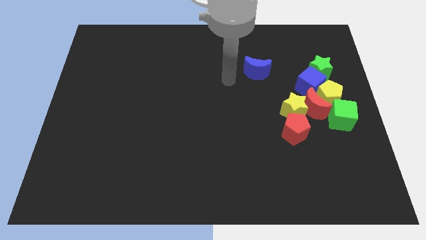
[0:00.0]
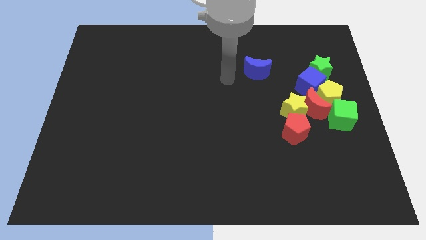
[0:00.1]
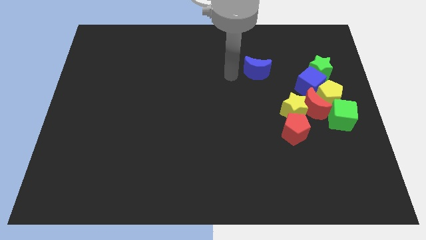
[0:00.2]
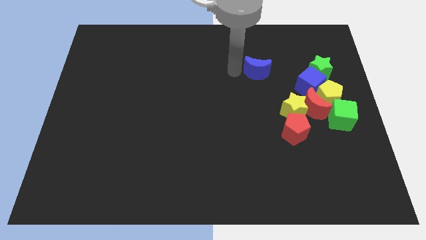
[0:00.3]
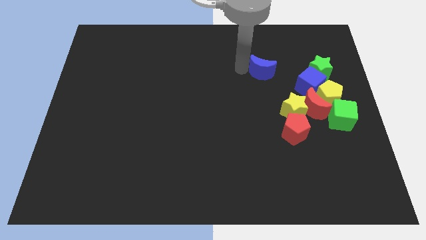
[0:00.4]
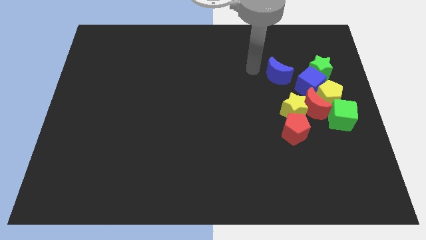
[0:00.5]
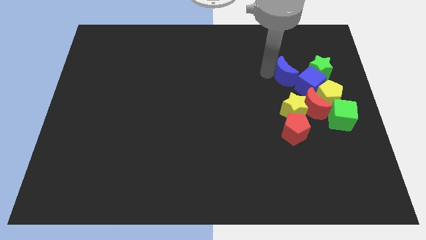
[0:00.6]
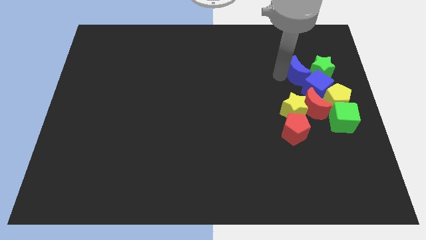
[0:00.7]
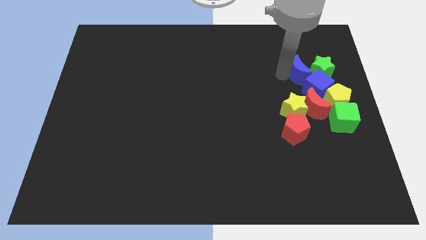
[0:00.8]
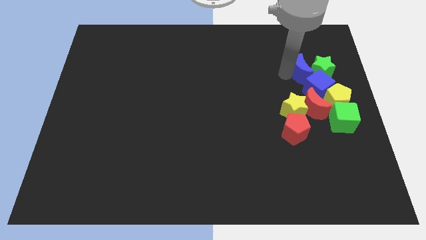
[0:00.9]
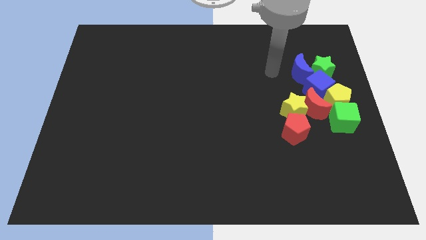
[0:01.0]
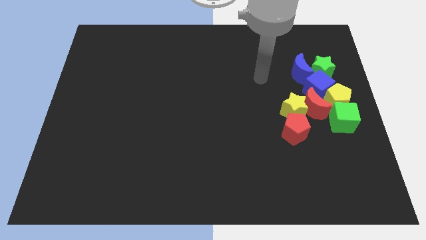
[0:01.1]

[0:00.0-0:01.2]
slide blue moon to the left of green star

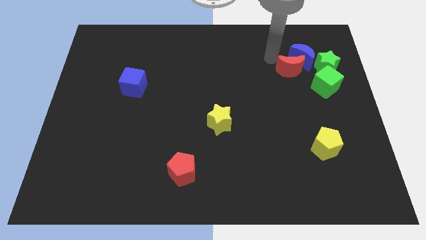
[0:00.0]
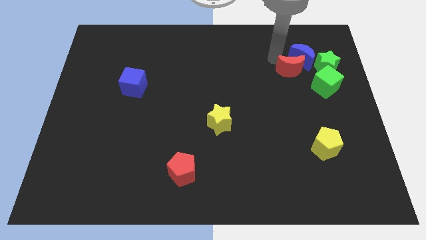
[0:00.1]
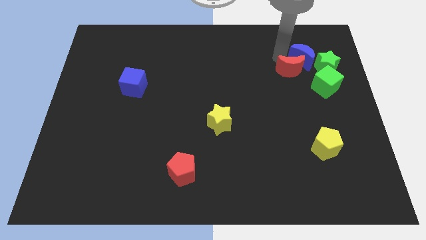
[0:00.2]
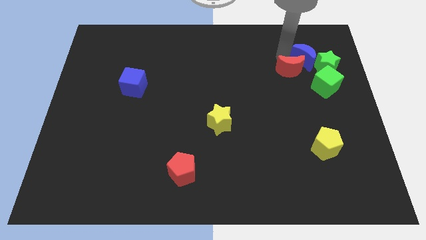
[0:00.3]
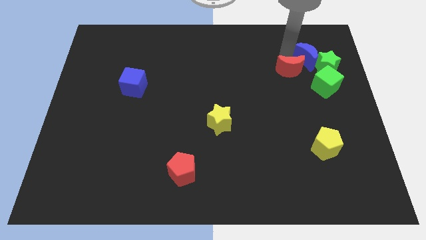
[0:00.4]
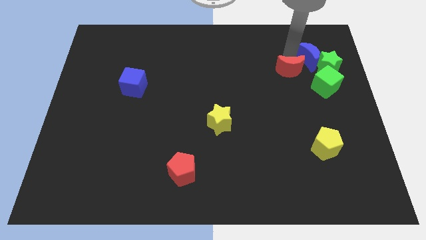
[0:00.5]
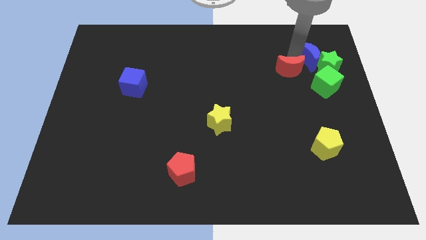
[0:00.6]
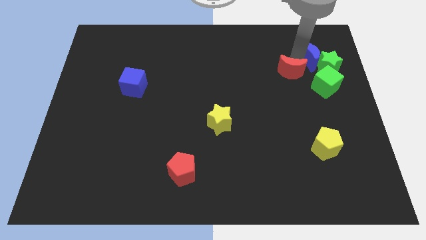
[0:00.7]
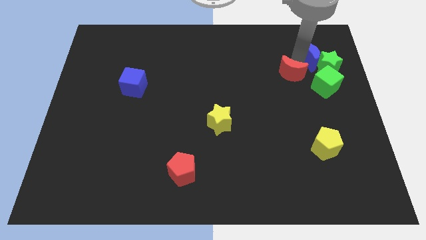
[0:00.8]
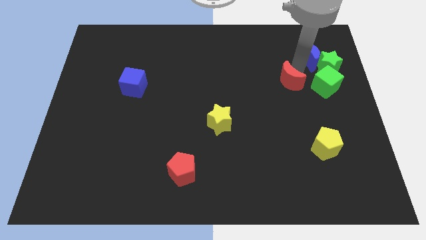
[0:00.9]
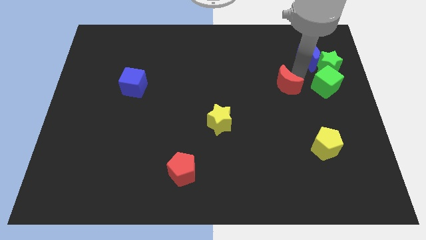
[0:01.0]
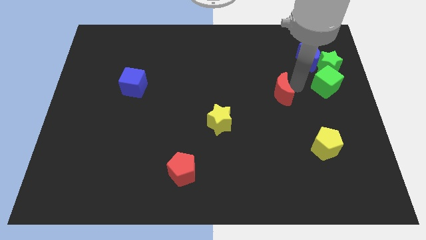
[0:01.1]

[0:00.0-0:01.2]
separate red moon from the blue moon

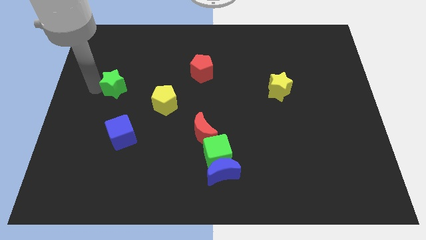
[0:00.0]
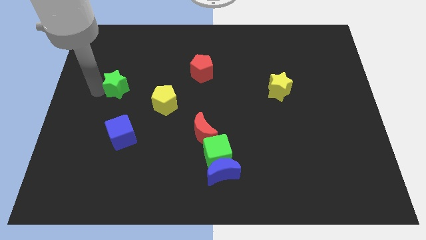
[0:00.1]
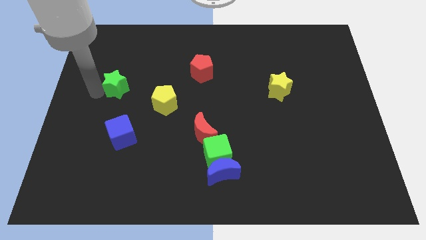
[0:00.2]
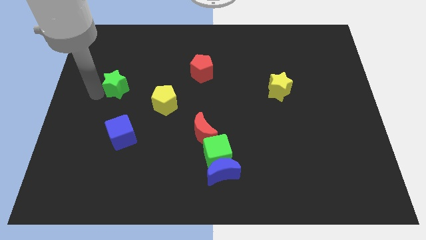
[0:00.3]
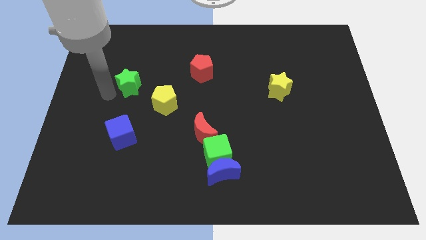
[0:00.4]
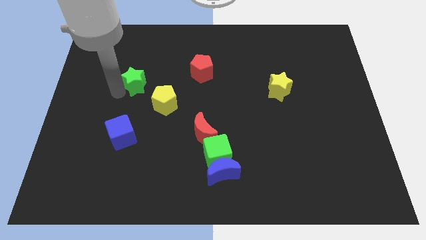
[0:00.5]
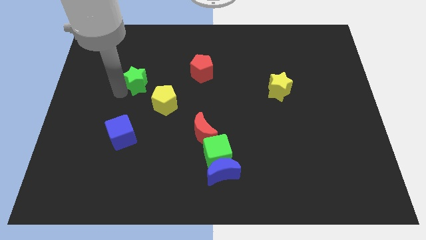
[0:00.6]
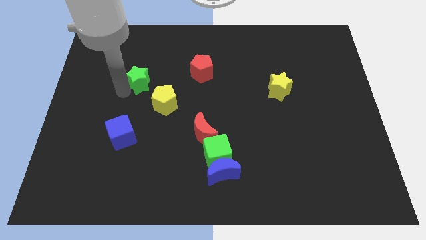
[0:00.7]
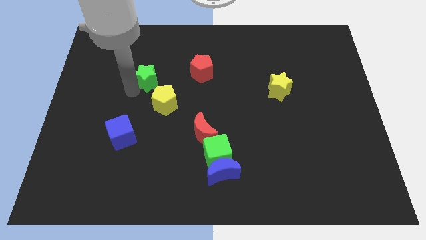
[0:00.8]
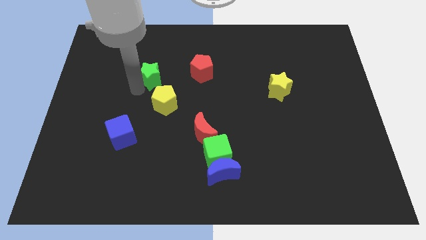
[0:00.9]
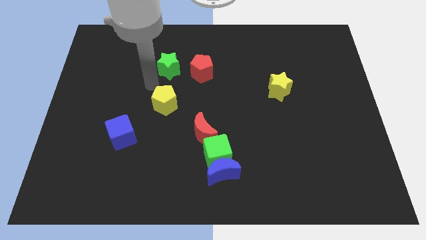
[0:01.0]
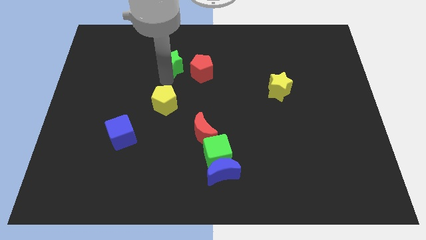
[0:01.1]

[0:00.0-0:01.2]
move the green star above the yellow pentagon

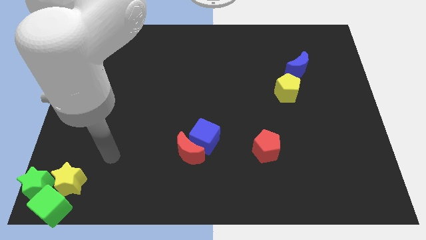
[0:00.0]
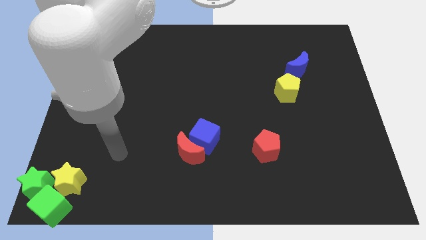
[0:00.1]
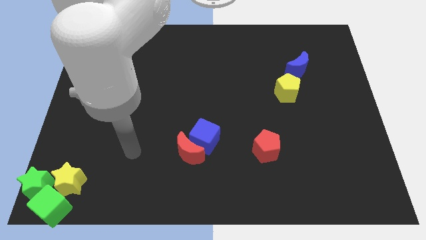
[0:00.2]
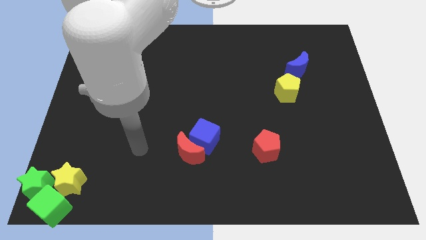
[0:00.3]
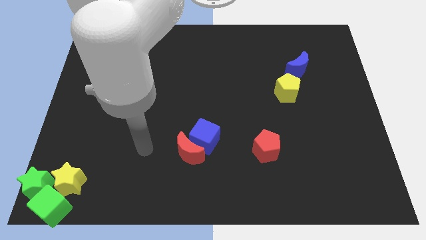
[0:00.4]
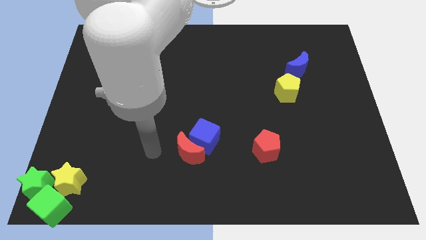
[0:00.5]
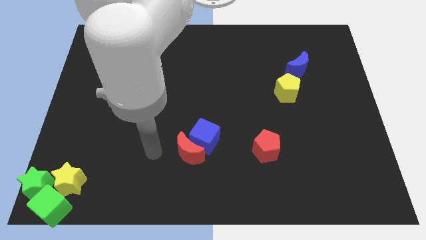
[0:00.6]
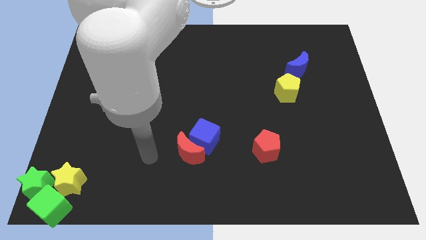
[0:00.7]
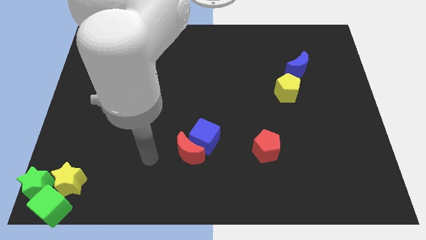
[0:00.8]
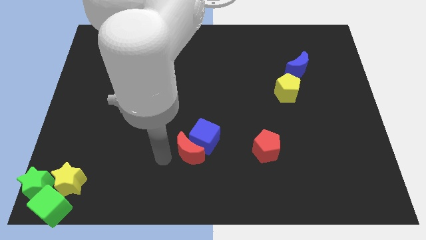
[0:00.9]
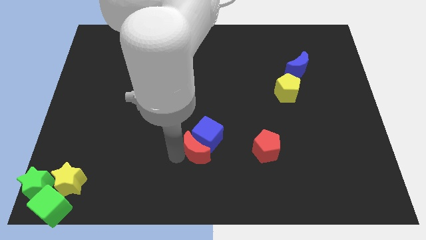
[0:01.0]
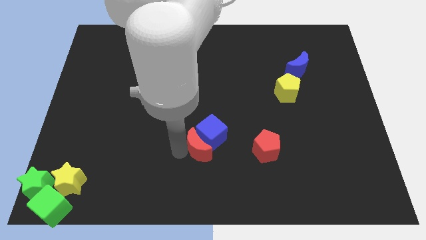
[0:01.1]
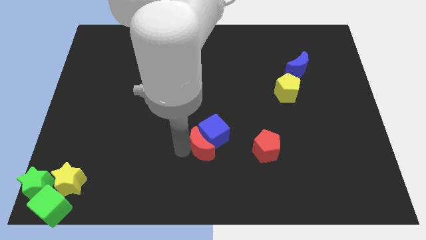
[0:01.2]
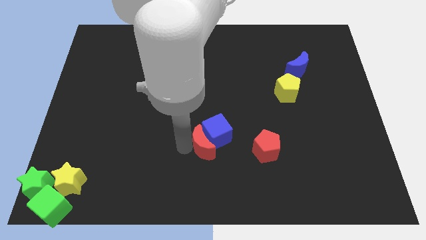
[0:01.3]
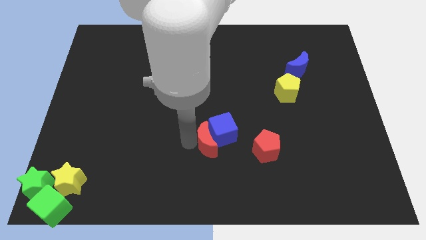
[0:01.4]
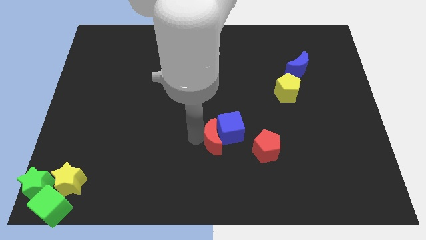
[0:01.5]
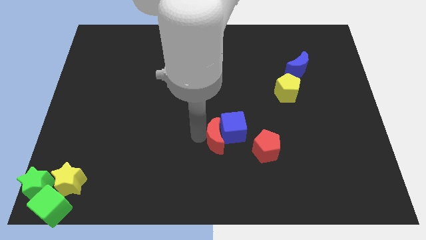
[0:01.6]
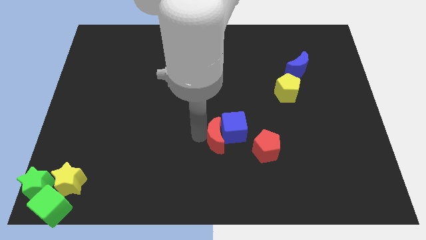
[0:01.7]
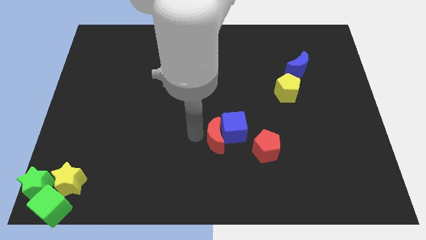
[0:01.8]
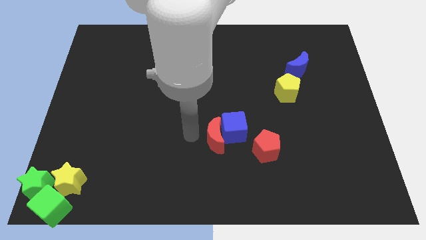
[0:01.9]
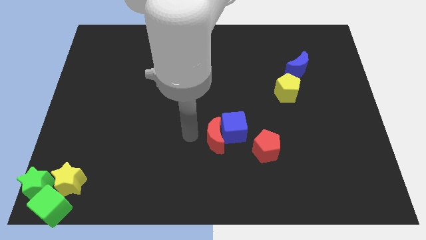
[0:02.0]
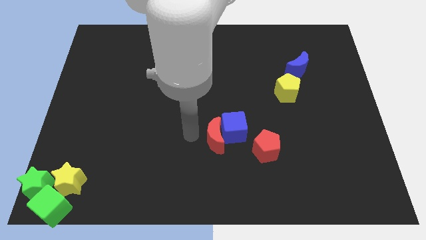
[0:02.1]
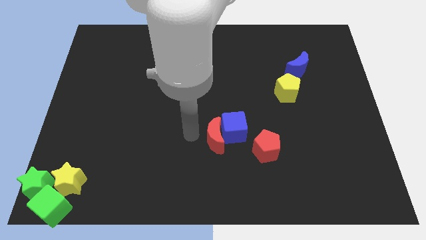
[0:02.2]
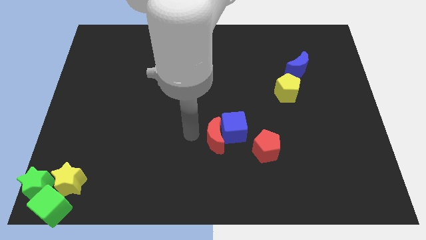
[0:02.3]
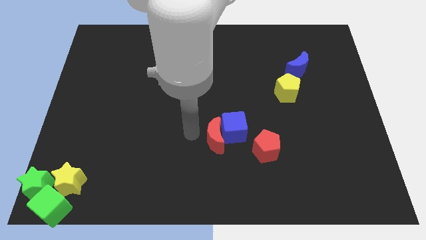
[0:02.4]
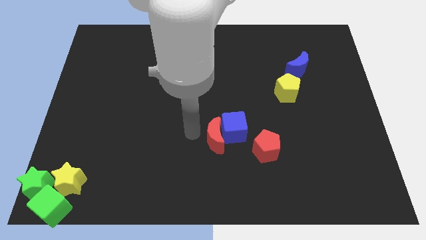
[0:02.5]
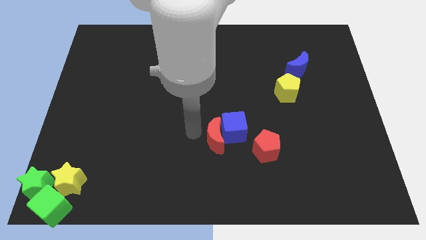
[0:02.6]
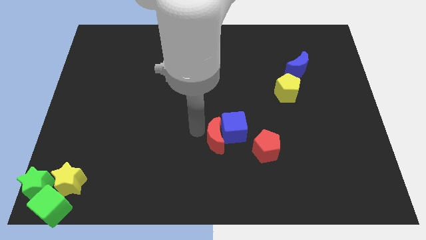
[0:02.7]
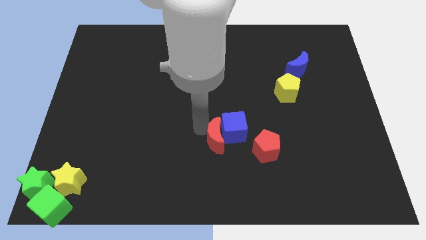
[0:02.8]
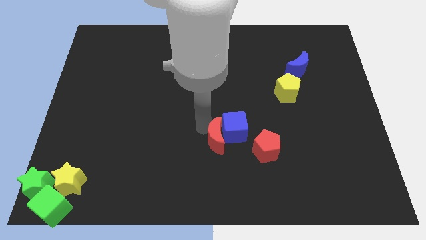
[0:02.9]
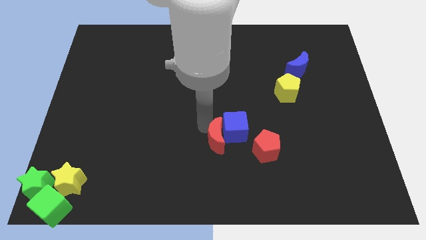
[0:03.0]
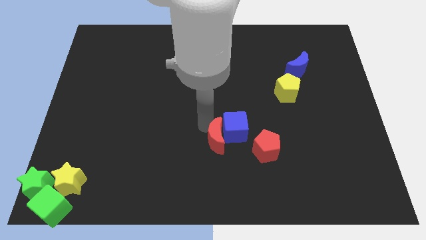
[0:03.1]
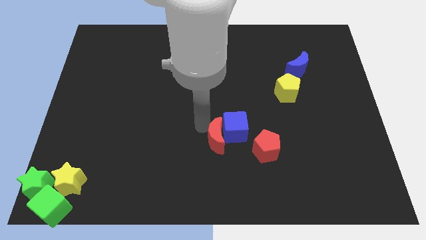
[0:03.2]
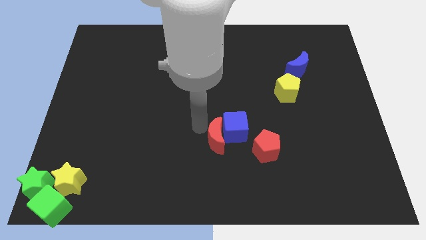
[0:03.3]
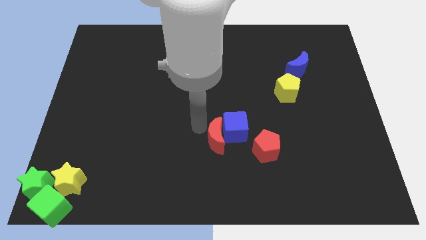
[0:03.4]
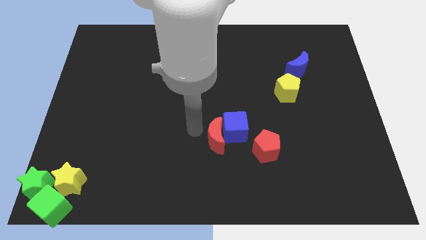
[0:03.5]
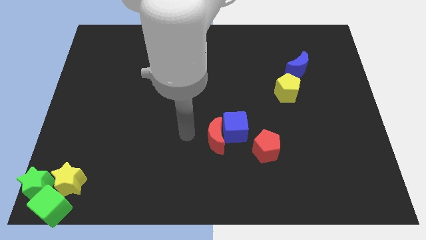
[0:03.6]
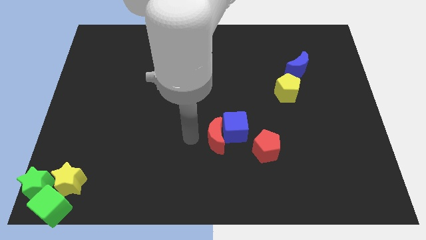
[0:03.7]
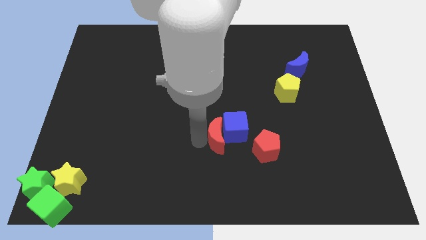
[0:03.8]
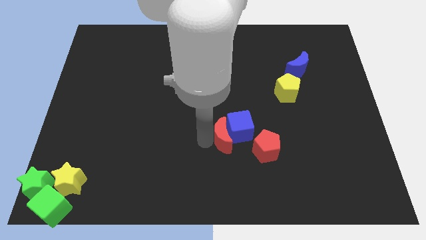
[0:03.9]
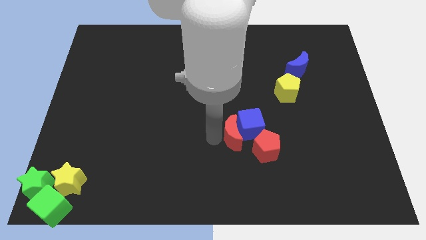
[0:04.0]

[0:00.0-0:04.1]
push the red crescent into blue cube

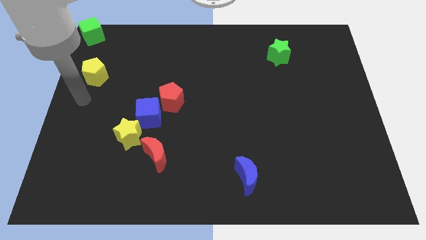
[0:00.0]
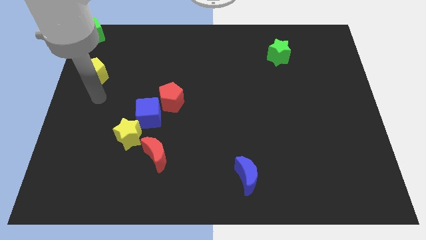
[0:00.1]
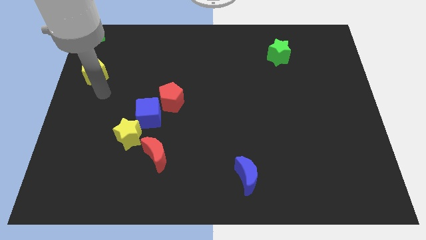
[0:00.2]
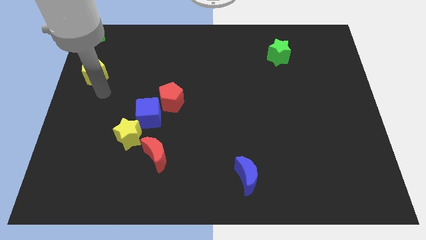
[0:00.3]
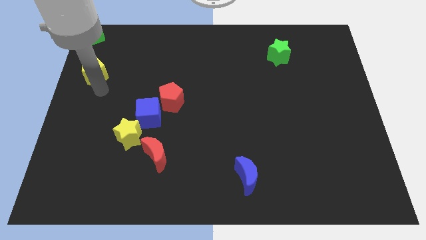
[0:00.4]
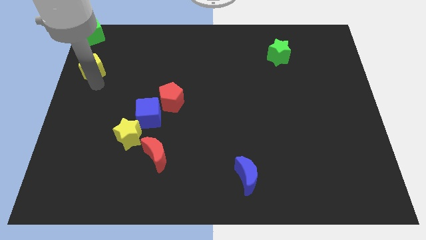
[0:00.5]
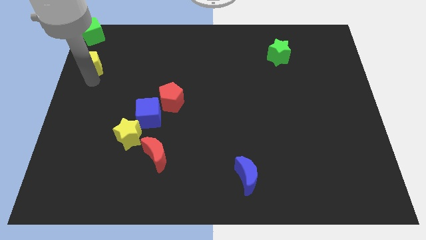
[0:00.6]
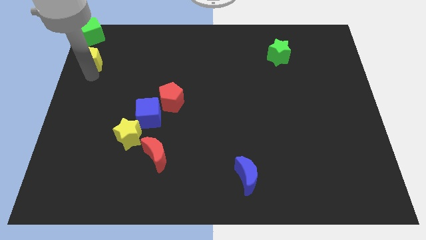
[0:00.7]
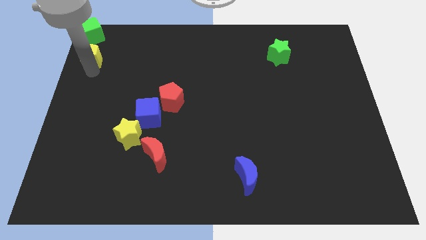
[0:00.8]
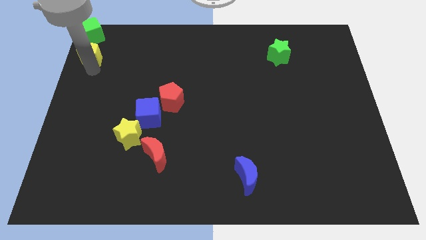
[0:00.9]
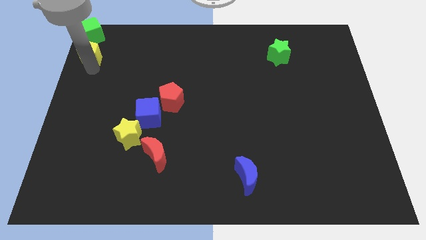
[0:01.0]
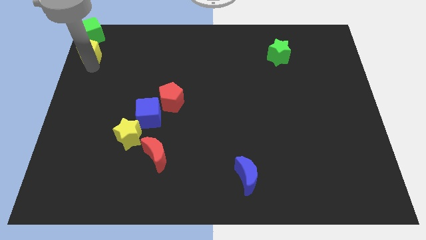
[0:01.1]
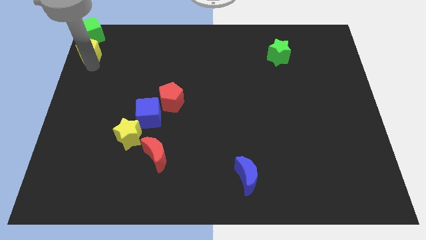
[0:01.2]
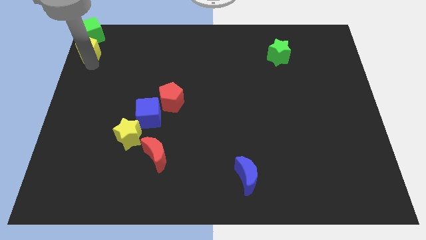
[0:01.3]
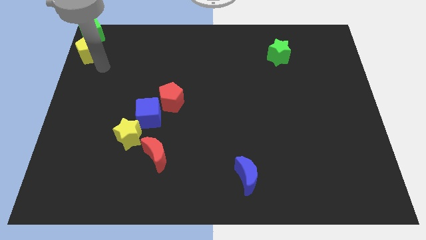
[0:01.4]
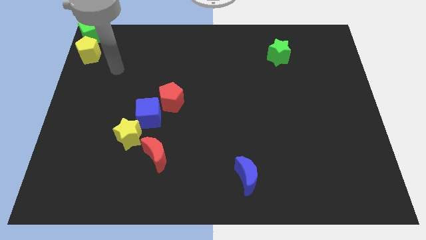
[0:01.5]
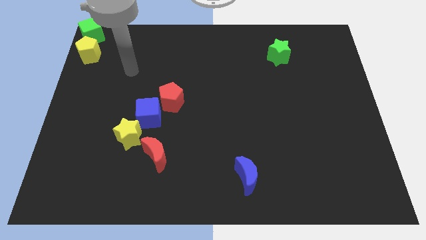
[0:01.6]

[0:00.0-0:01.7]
move the yellow pentagon below the green cube
